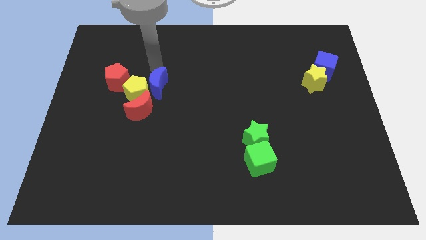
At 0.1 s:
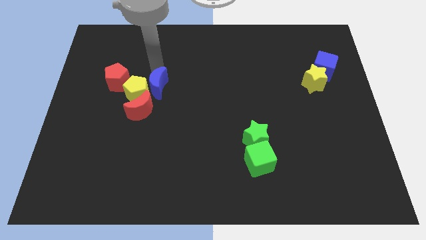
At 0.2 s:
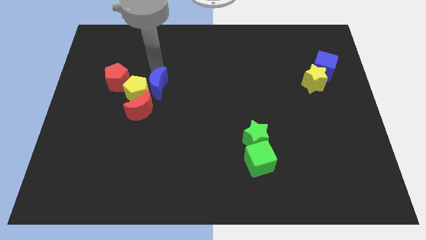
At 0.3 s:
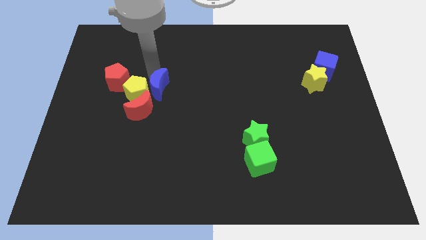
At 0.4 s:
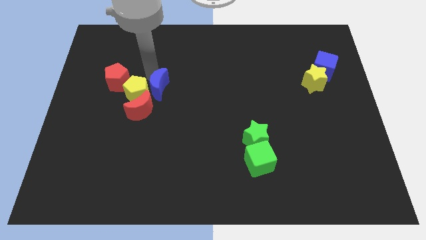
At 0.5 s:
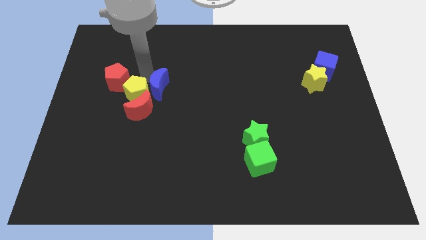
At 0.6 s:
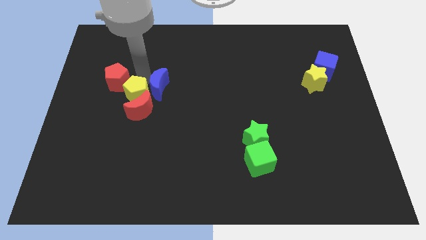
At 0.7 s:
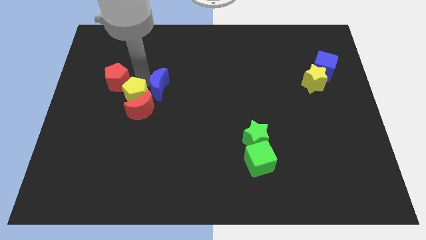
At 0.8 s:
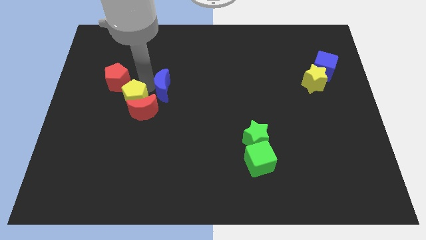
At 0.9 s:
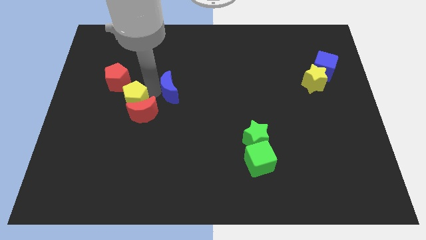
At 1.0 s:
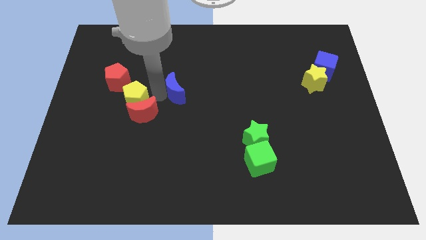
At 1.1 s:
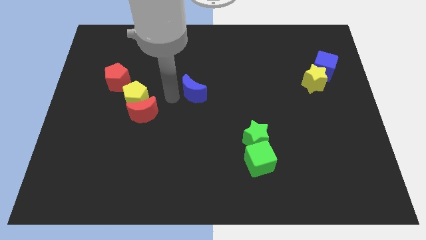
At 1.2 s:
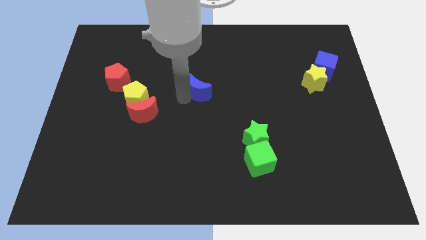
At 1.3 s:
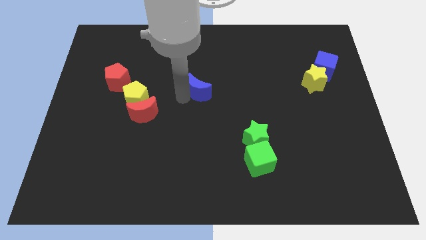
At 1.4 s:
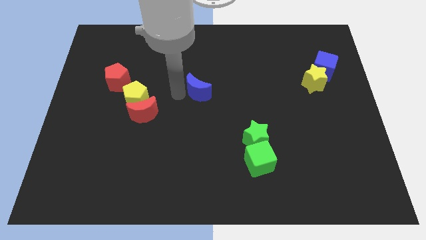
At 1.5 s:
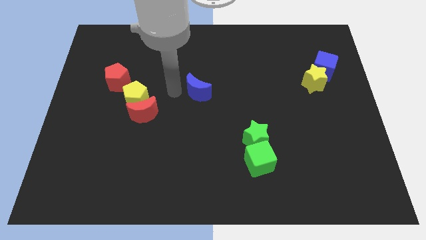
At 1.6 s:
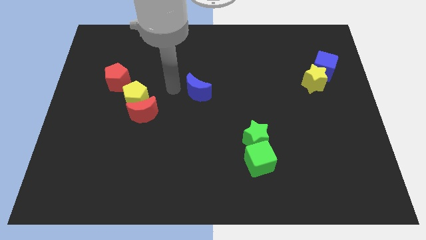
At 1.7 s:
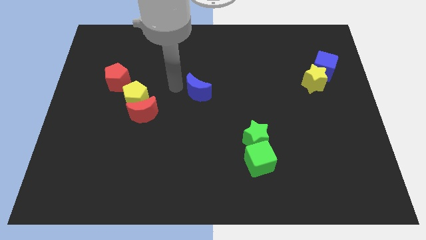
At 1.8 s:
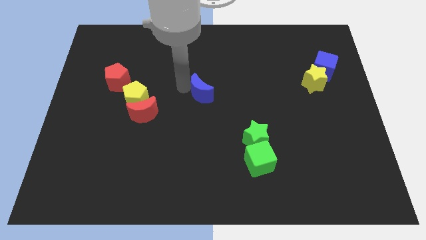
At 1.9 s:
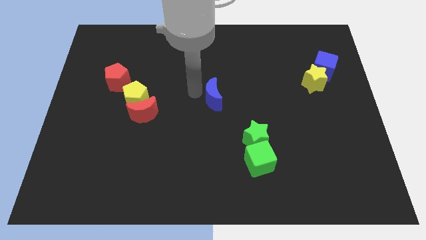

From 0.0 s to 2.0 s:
place the blue crescent at the center of the board

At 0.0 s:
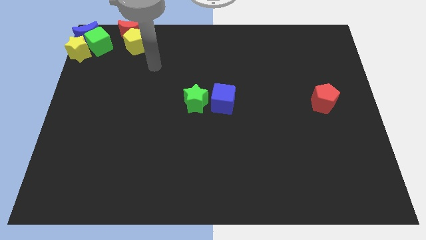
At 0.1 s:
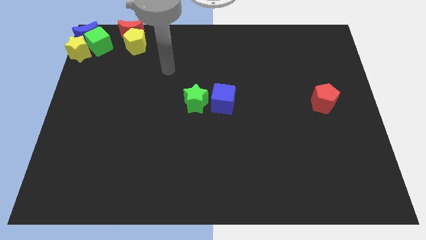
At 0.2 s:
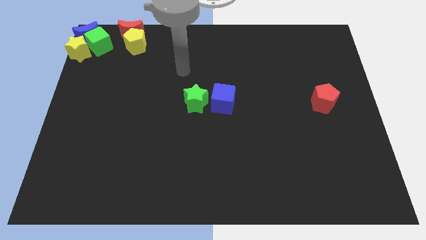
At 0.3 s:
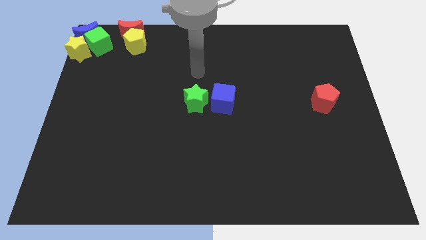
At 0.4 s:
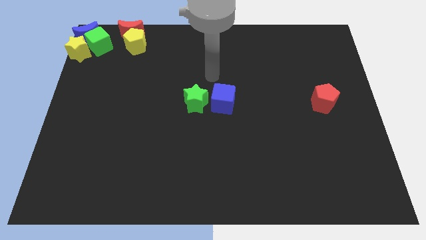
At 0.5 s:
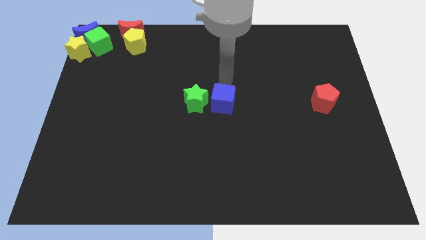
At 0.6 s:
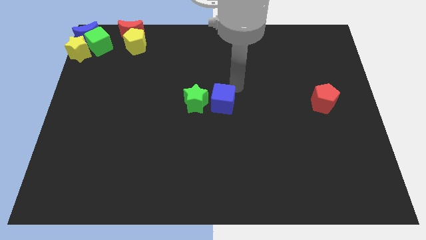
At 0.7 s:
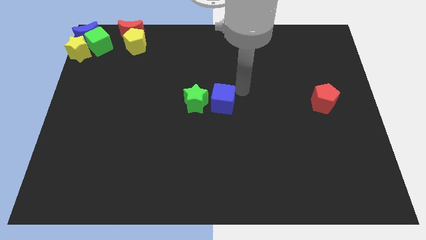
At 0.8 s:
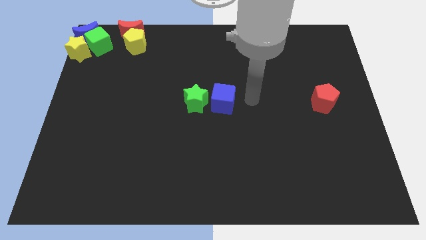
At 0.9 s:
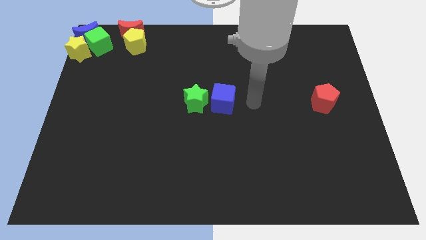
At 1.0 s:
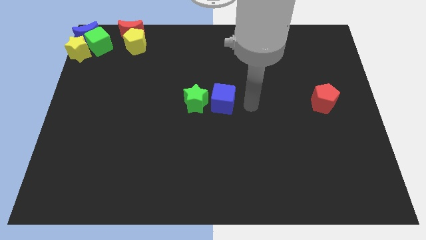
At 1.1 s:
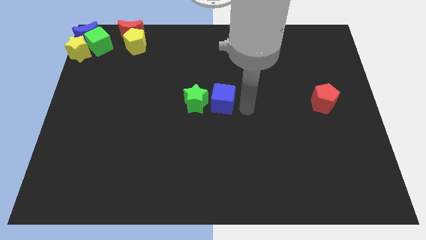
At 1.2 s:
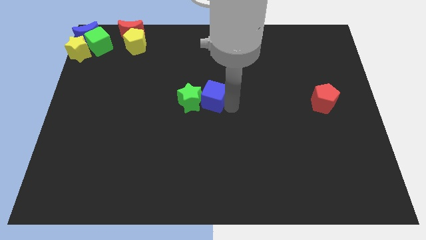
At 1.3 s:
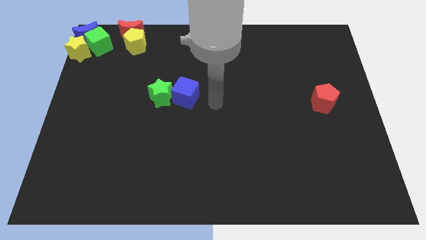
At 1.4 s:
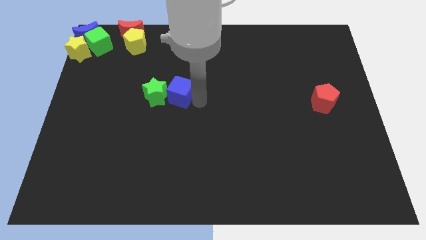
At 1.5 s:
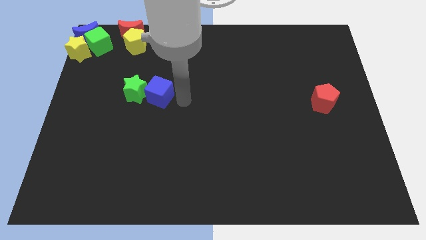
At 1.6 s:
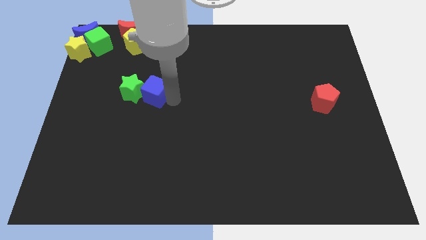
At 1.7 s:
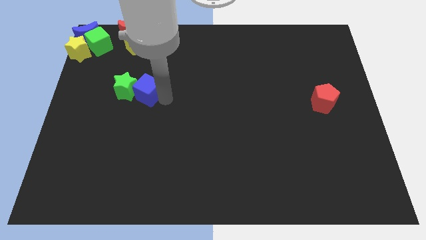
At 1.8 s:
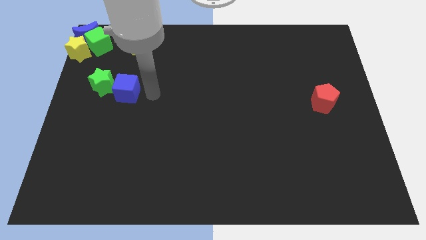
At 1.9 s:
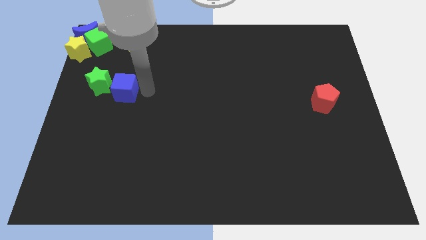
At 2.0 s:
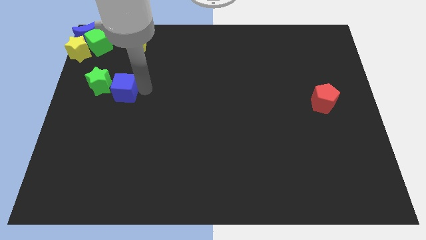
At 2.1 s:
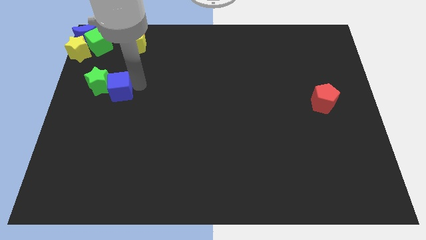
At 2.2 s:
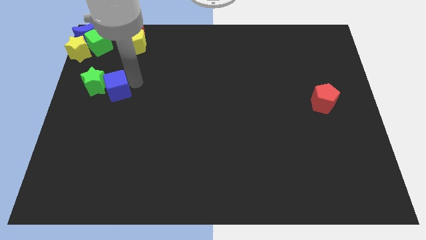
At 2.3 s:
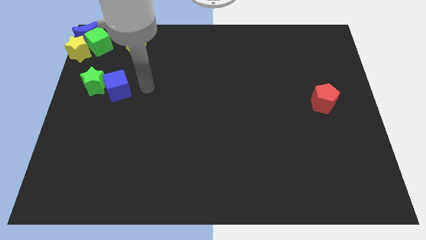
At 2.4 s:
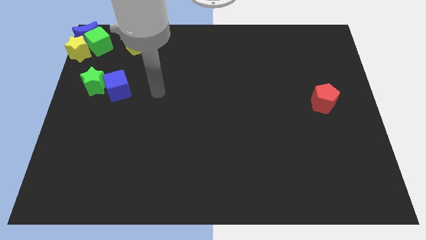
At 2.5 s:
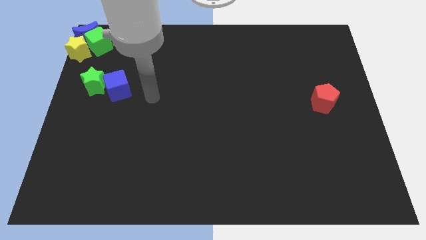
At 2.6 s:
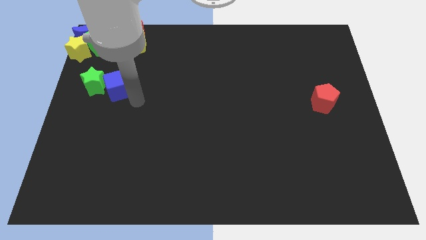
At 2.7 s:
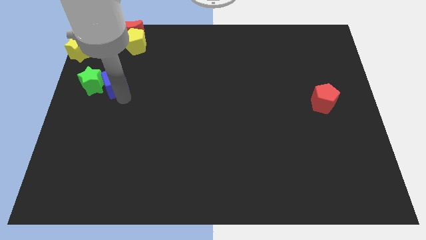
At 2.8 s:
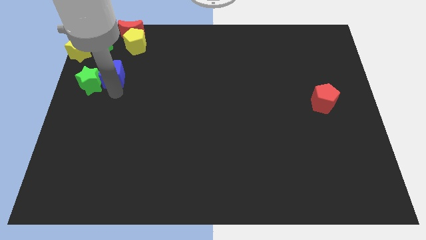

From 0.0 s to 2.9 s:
push the blue cube along with green star towards the left to the board

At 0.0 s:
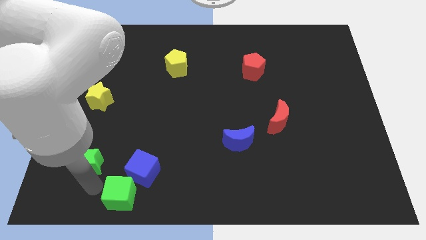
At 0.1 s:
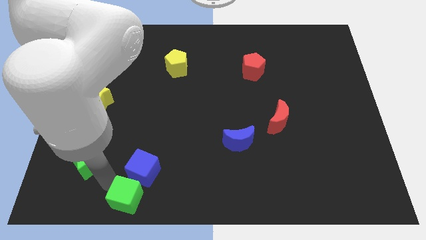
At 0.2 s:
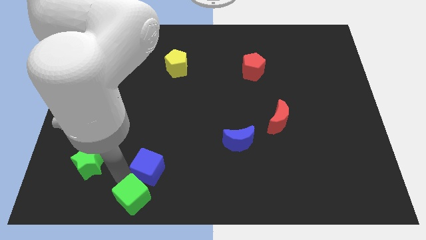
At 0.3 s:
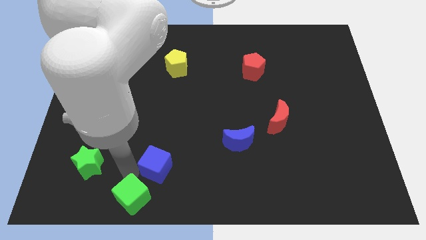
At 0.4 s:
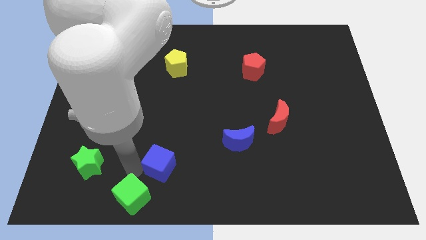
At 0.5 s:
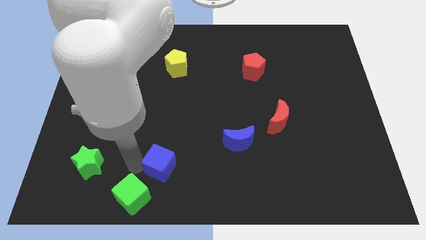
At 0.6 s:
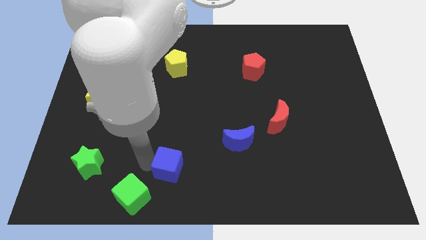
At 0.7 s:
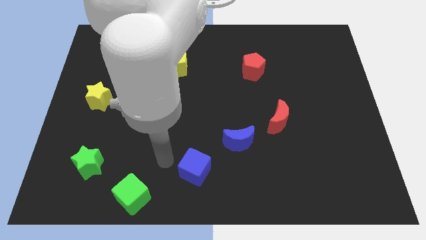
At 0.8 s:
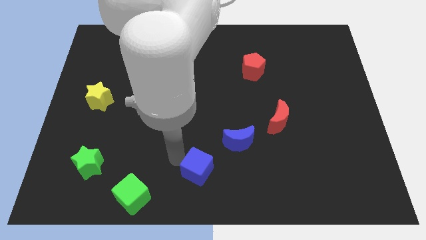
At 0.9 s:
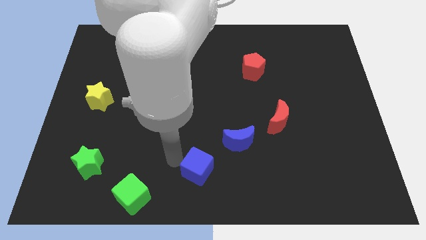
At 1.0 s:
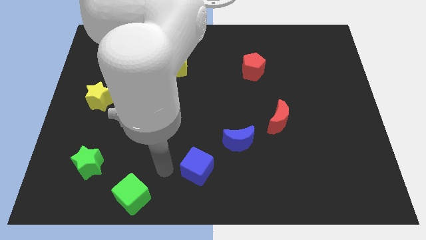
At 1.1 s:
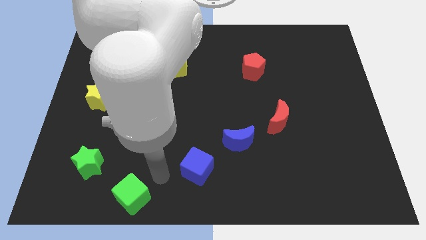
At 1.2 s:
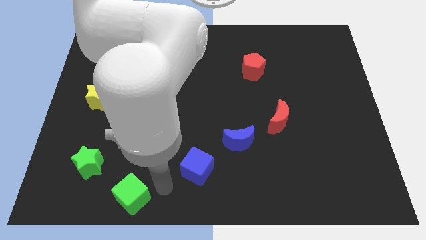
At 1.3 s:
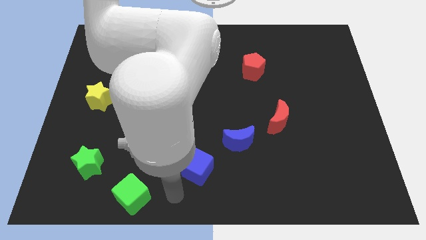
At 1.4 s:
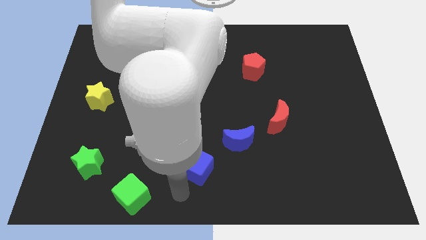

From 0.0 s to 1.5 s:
separate blue cube from the green cube

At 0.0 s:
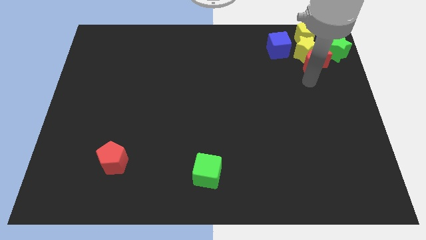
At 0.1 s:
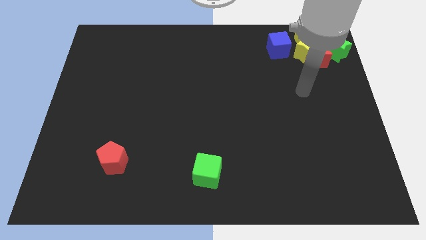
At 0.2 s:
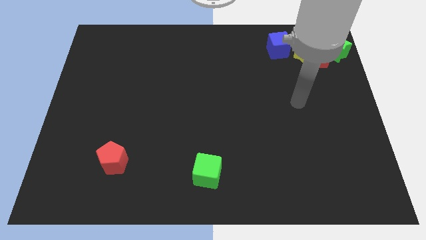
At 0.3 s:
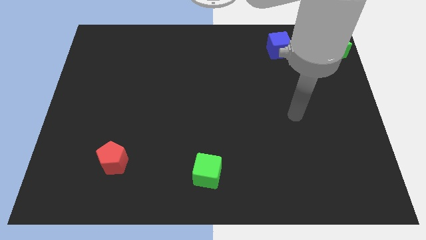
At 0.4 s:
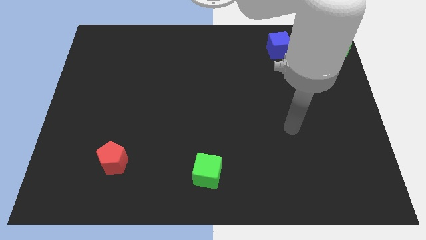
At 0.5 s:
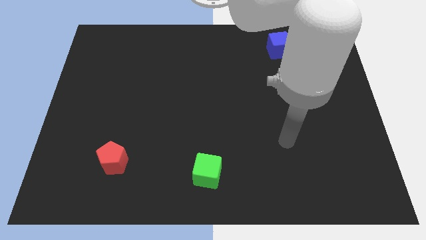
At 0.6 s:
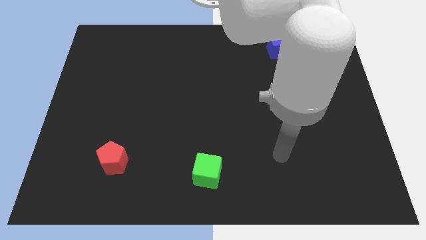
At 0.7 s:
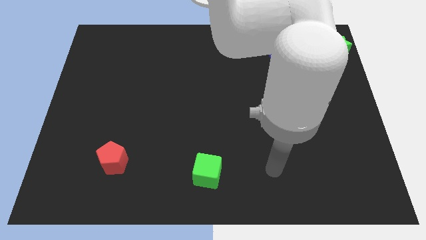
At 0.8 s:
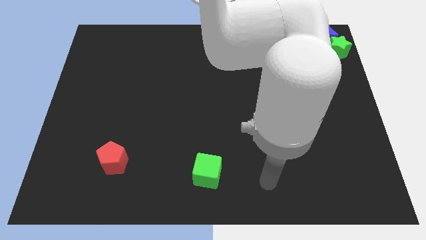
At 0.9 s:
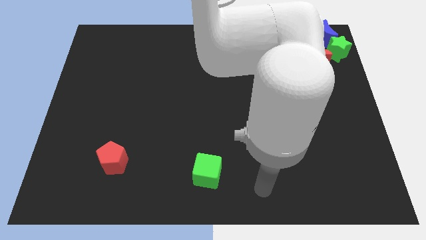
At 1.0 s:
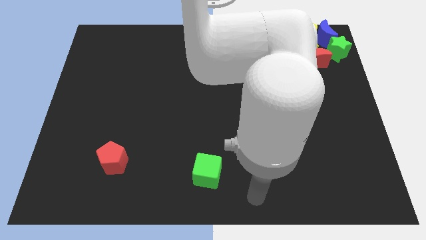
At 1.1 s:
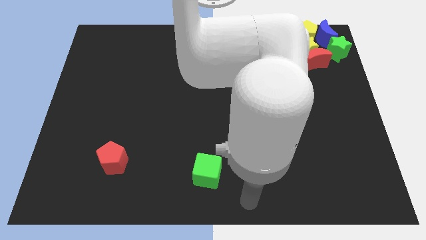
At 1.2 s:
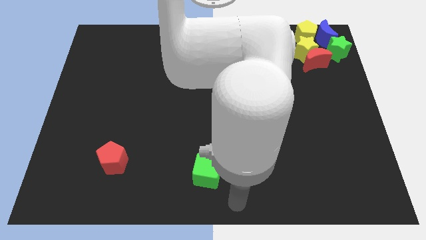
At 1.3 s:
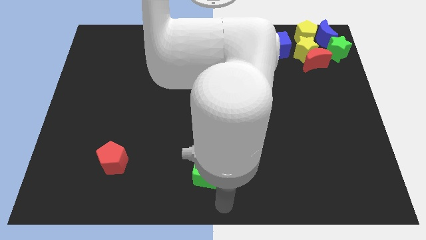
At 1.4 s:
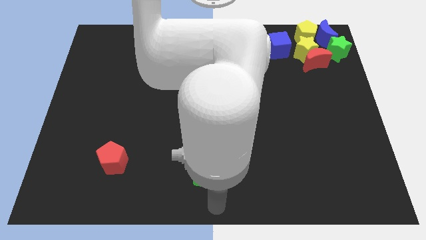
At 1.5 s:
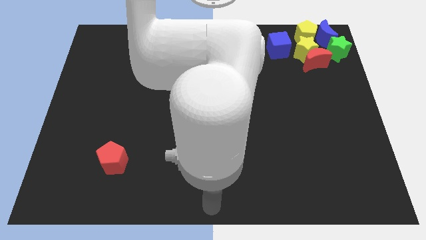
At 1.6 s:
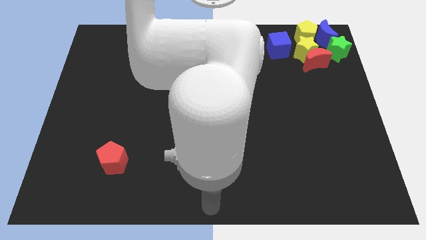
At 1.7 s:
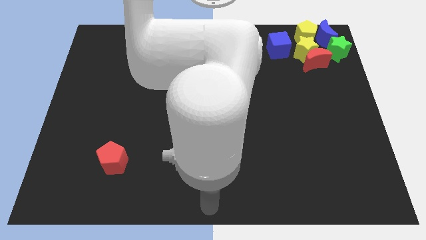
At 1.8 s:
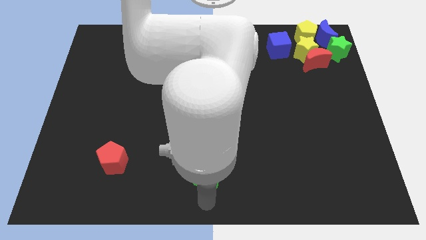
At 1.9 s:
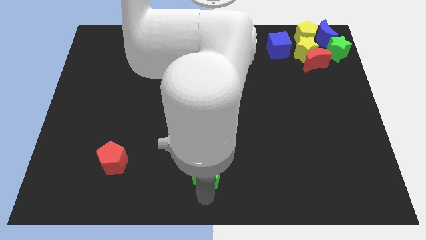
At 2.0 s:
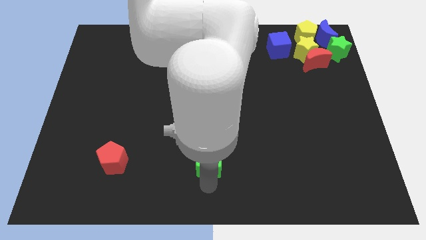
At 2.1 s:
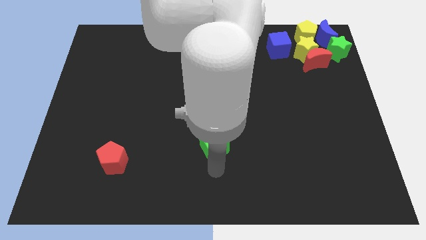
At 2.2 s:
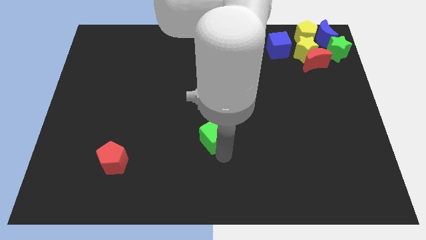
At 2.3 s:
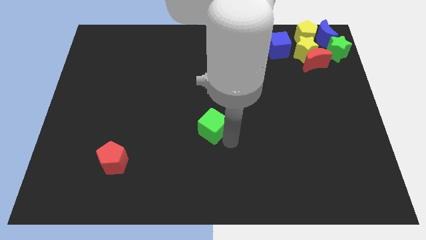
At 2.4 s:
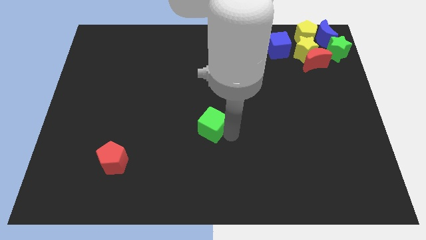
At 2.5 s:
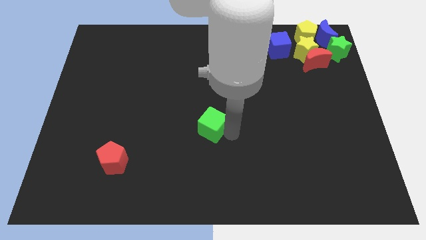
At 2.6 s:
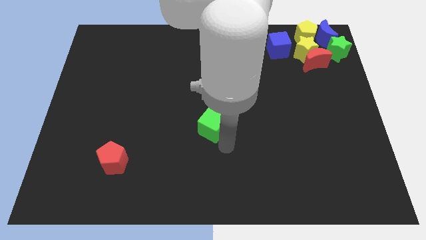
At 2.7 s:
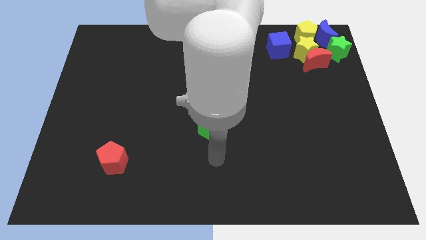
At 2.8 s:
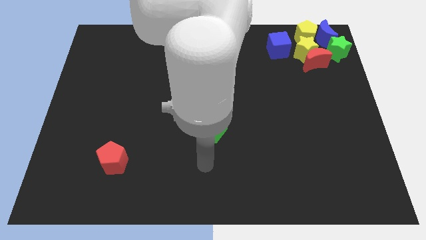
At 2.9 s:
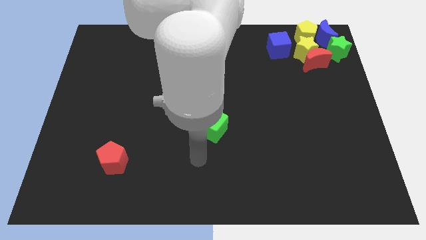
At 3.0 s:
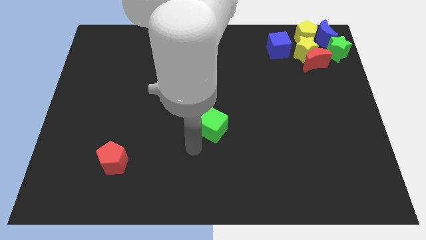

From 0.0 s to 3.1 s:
slide the green cube slightly upwards
